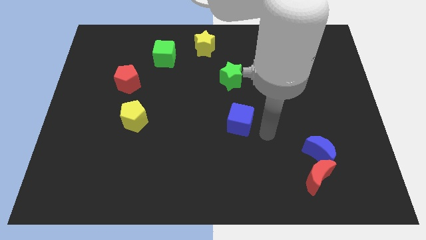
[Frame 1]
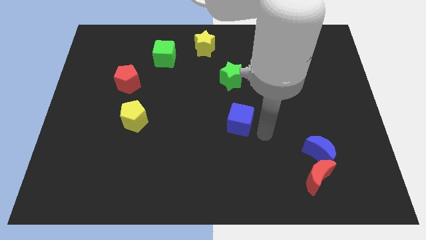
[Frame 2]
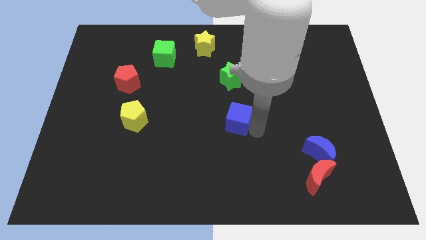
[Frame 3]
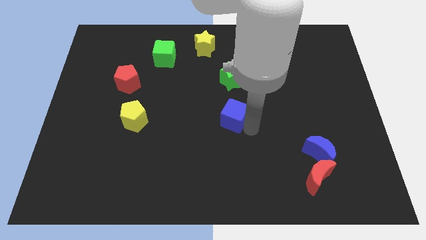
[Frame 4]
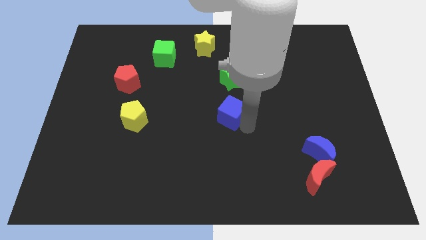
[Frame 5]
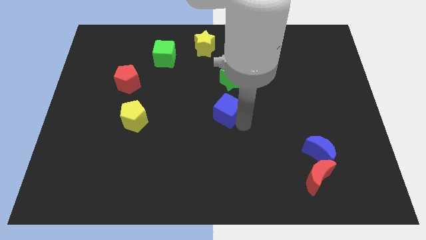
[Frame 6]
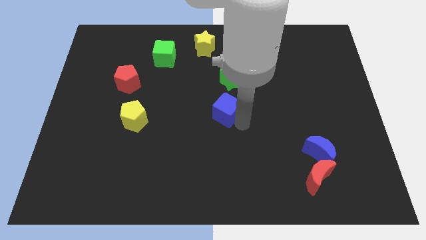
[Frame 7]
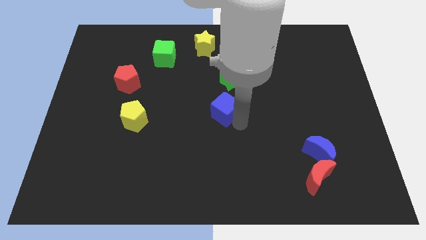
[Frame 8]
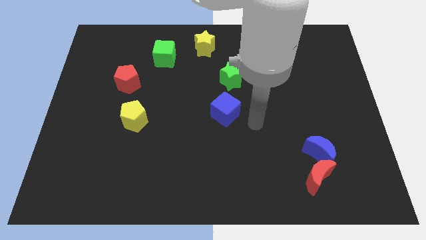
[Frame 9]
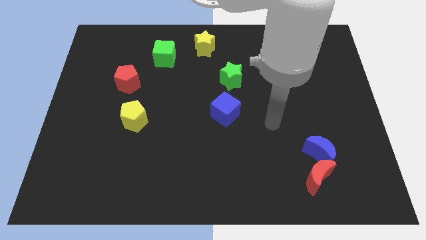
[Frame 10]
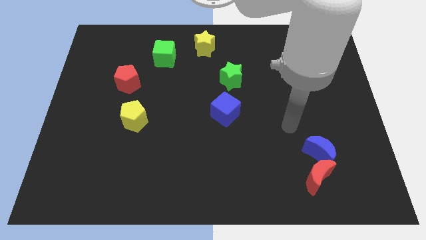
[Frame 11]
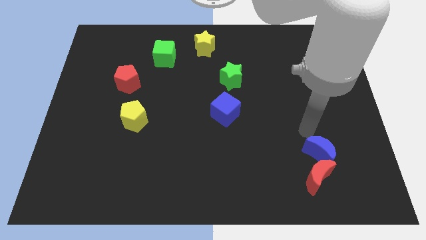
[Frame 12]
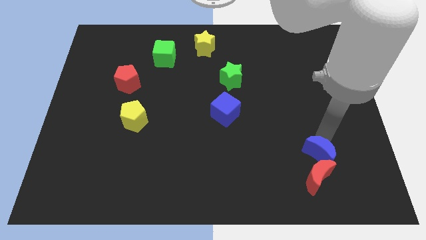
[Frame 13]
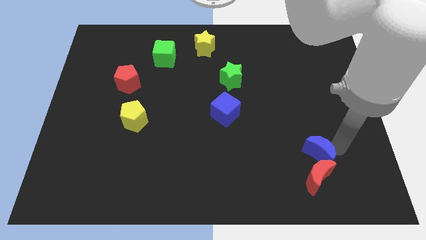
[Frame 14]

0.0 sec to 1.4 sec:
place the blue cube below the green star

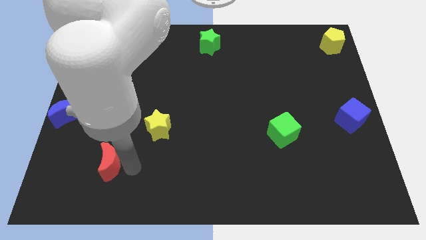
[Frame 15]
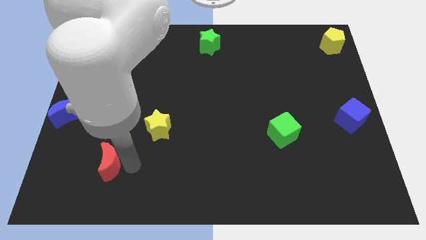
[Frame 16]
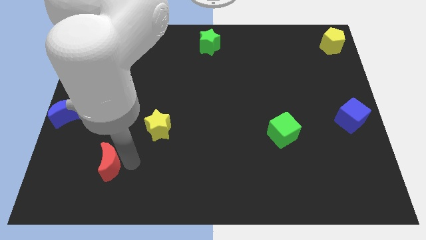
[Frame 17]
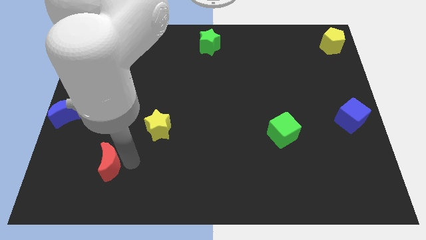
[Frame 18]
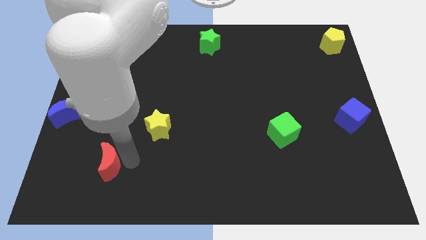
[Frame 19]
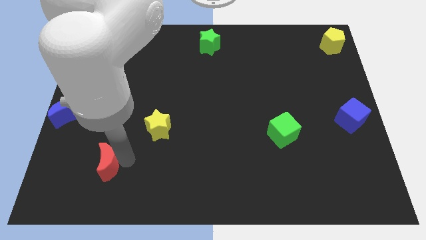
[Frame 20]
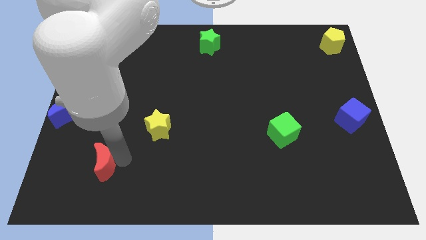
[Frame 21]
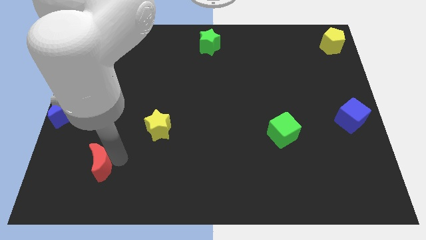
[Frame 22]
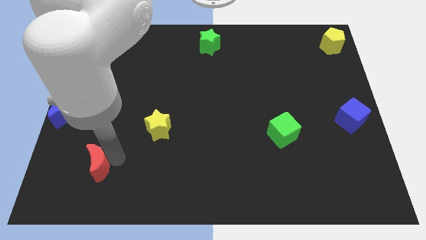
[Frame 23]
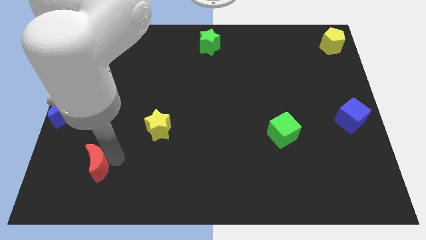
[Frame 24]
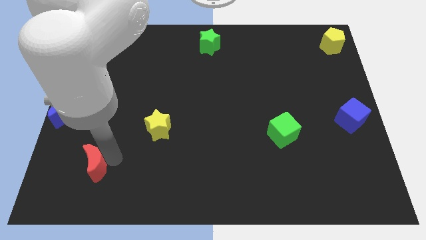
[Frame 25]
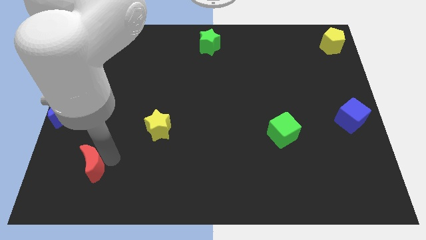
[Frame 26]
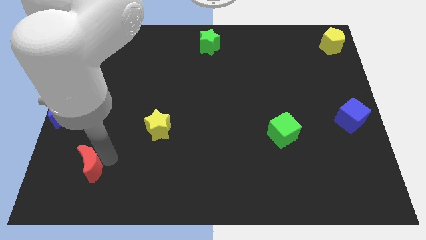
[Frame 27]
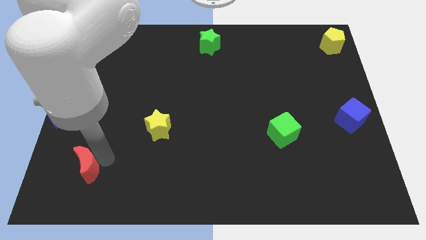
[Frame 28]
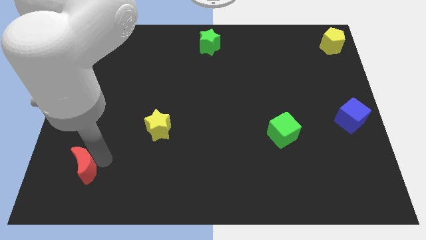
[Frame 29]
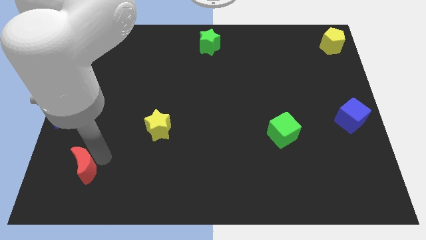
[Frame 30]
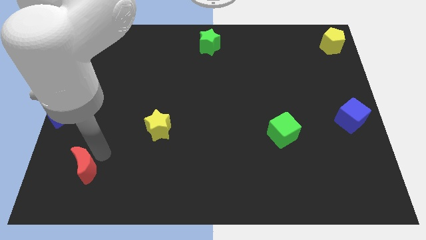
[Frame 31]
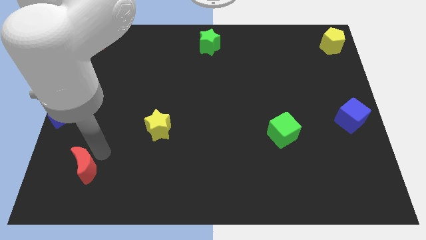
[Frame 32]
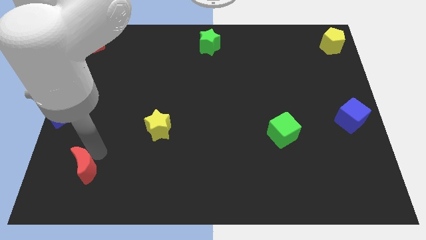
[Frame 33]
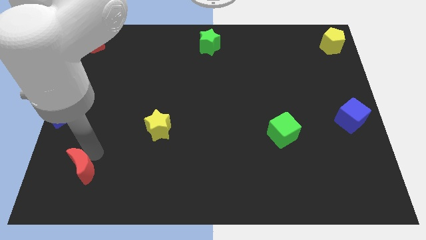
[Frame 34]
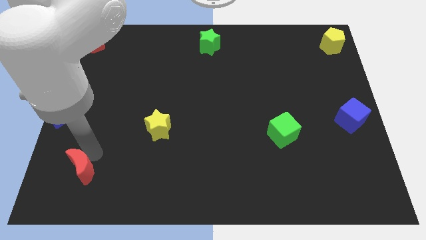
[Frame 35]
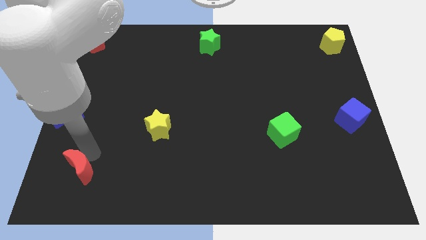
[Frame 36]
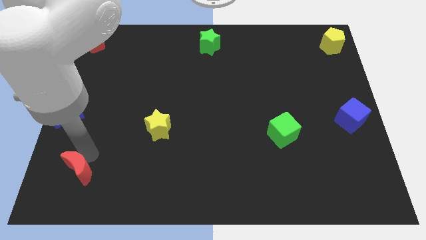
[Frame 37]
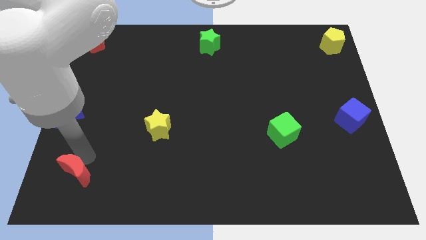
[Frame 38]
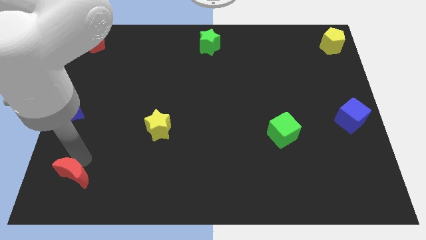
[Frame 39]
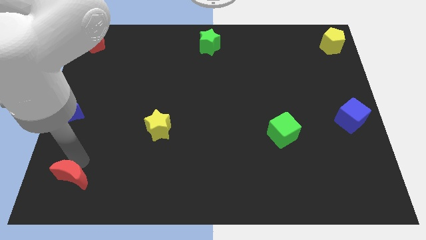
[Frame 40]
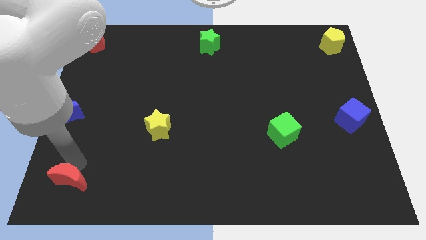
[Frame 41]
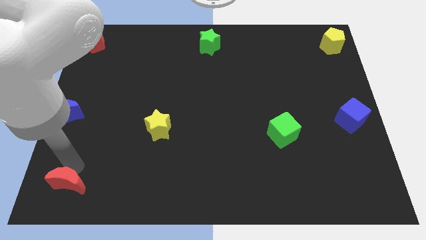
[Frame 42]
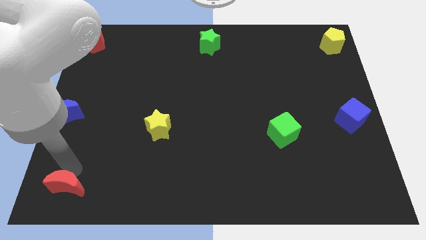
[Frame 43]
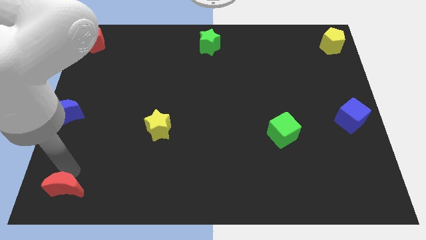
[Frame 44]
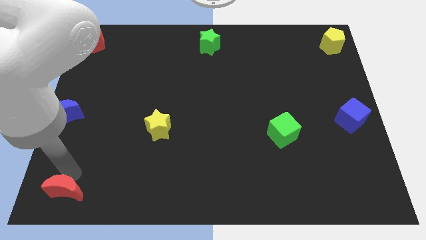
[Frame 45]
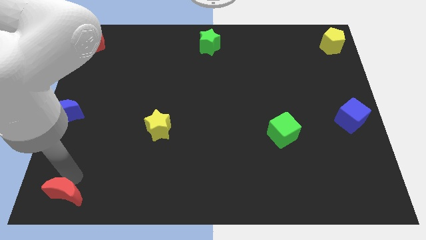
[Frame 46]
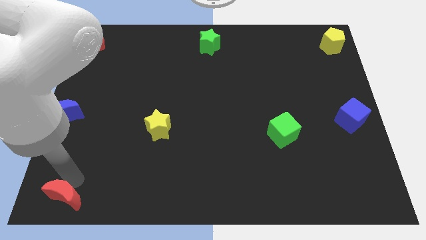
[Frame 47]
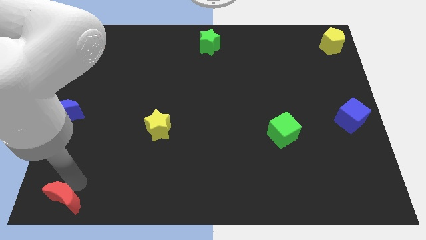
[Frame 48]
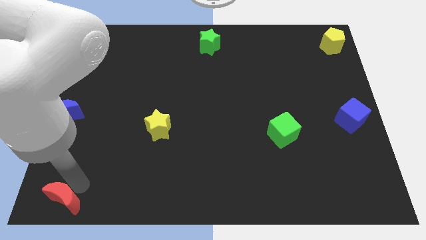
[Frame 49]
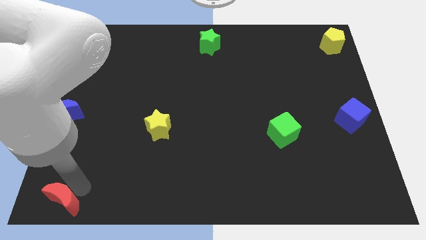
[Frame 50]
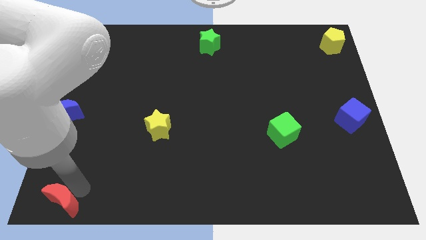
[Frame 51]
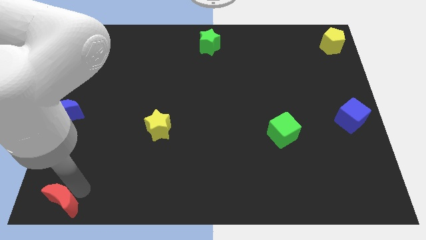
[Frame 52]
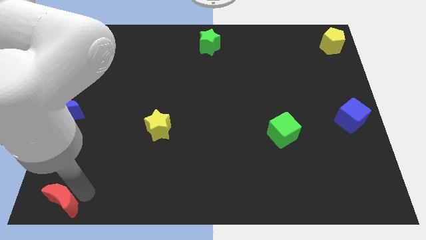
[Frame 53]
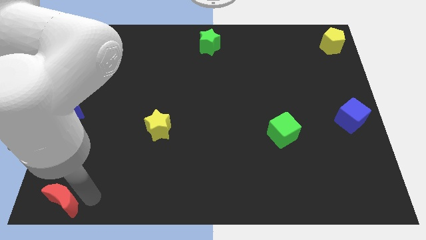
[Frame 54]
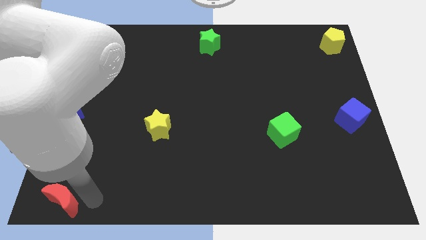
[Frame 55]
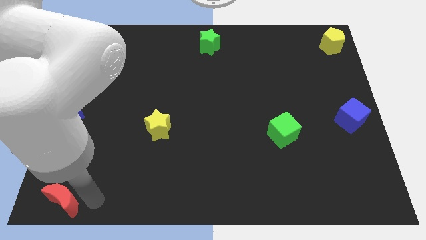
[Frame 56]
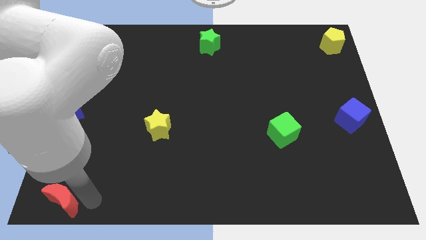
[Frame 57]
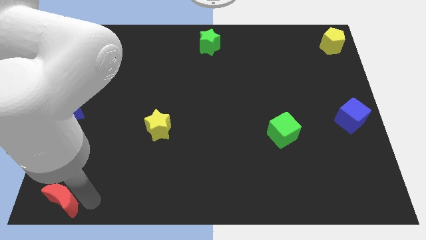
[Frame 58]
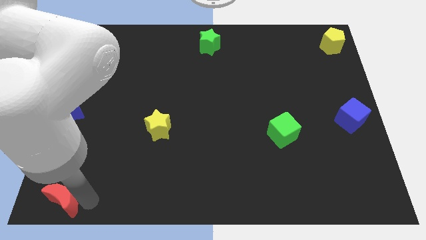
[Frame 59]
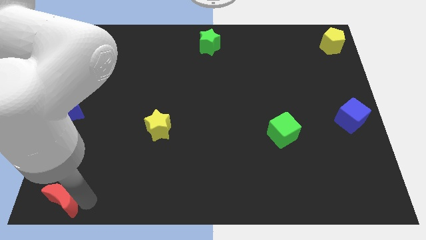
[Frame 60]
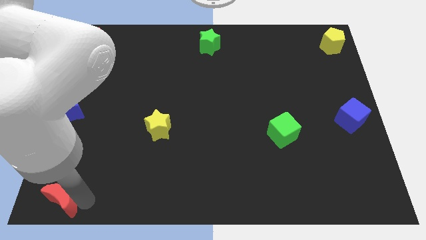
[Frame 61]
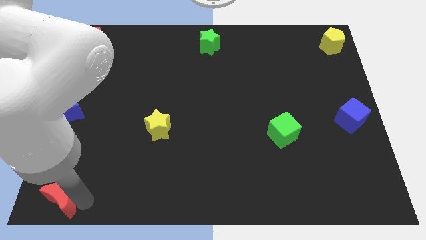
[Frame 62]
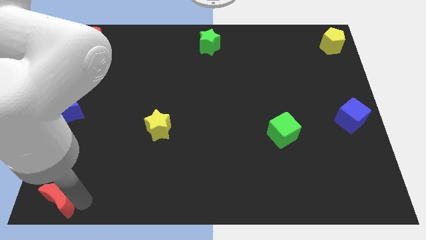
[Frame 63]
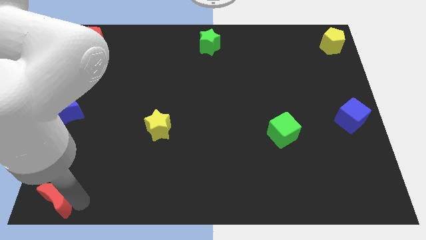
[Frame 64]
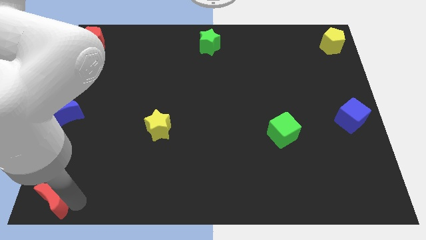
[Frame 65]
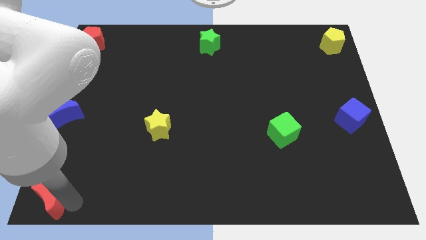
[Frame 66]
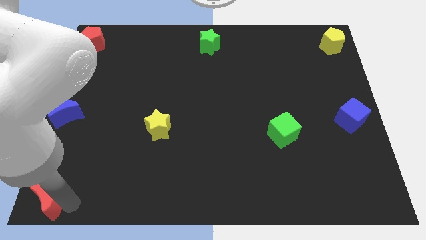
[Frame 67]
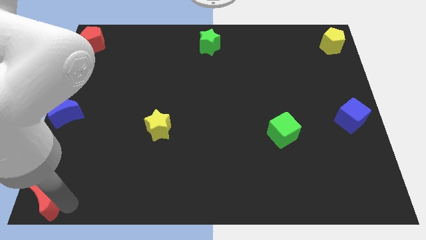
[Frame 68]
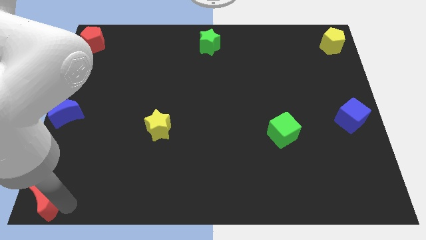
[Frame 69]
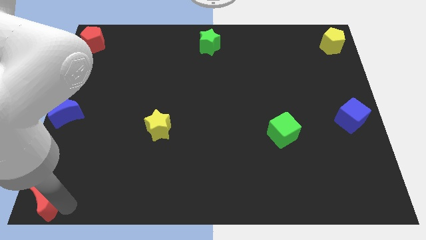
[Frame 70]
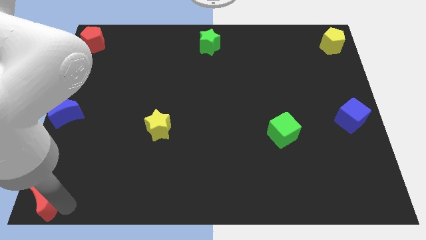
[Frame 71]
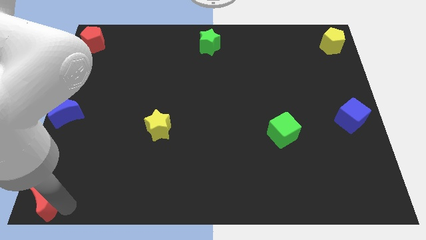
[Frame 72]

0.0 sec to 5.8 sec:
move the red crescent to the bottom left of the board

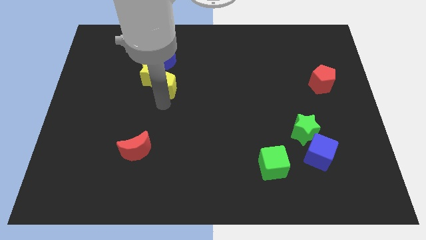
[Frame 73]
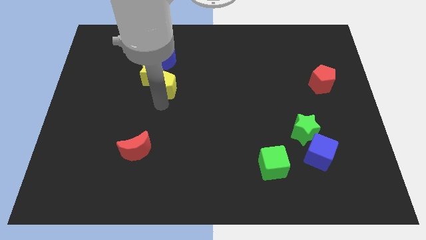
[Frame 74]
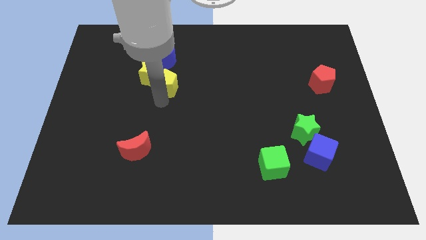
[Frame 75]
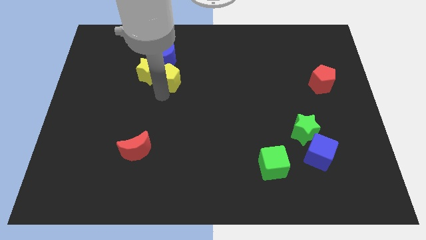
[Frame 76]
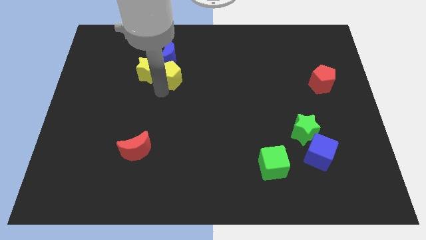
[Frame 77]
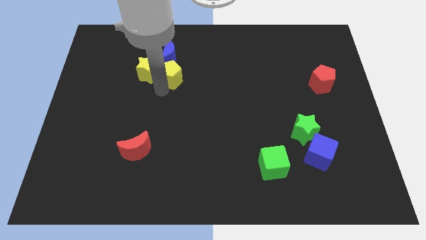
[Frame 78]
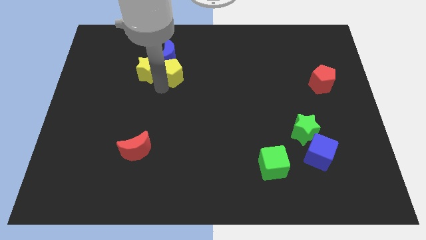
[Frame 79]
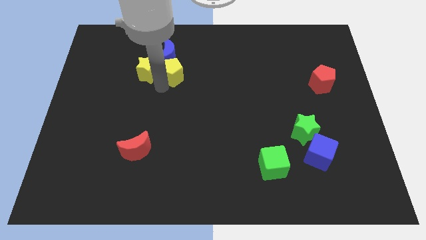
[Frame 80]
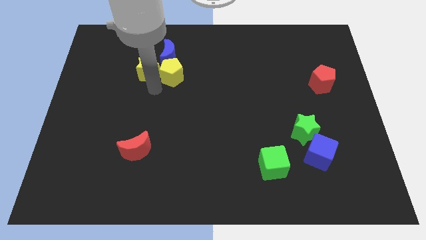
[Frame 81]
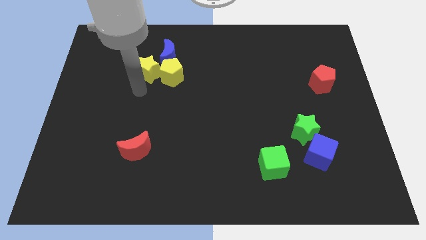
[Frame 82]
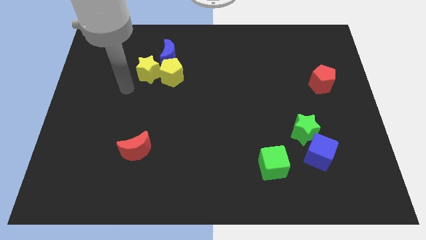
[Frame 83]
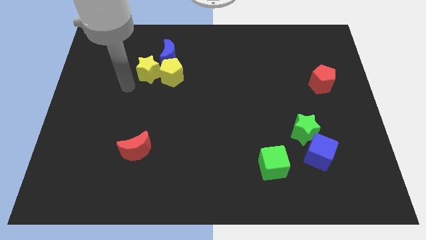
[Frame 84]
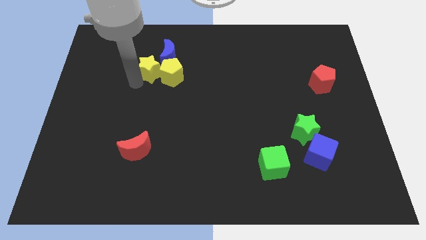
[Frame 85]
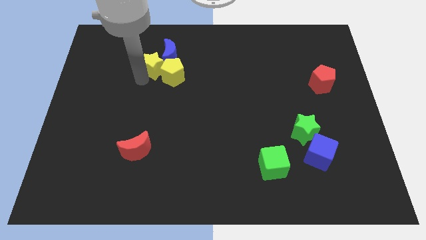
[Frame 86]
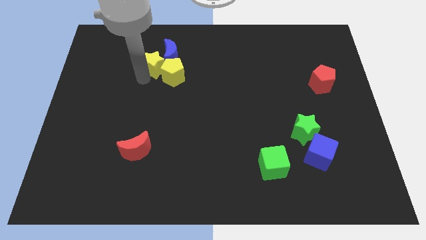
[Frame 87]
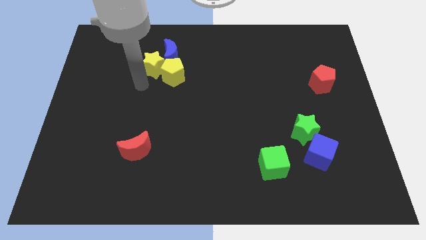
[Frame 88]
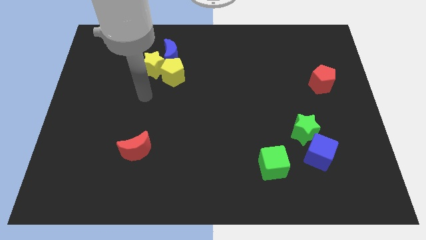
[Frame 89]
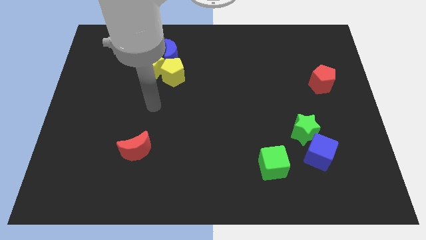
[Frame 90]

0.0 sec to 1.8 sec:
push the yellow star into the blue crescent
